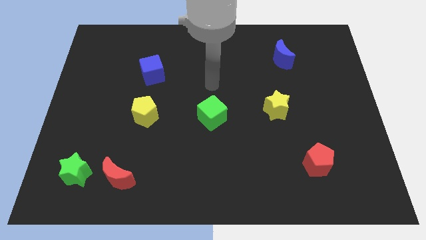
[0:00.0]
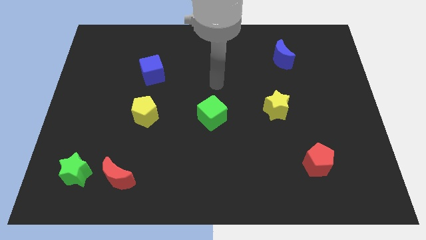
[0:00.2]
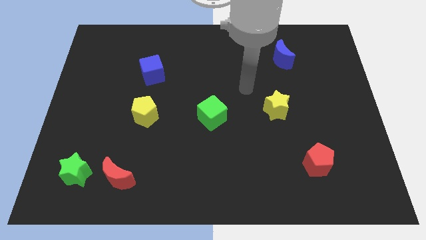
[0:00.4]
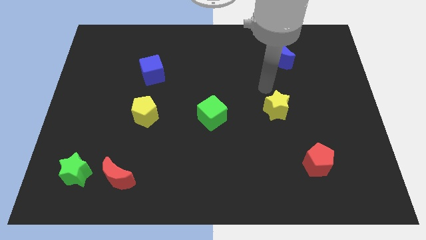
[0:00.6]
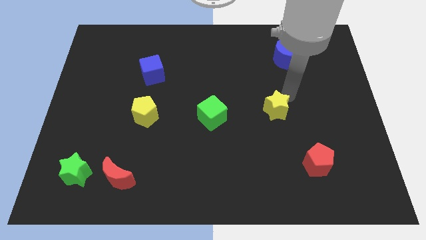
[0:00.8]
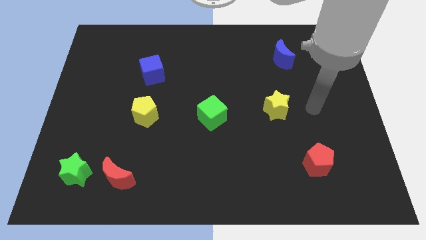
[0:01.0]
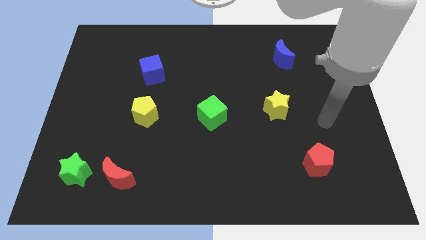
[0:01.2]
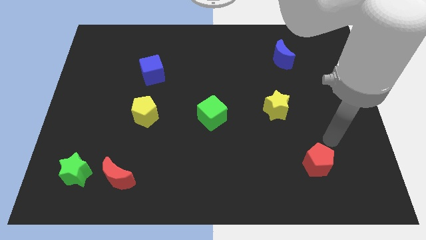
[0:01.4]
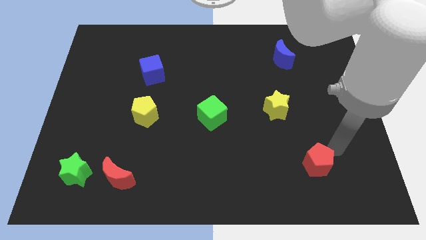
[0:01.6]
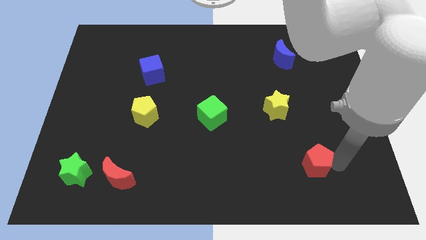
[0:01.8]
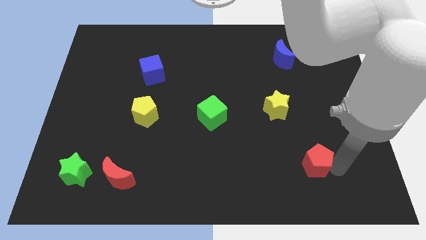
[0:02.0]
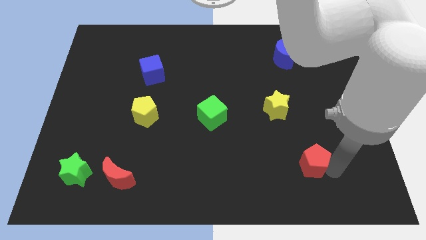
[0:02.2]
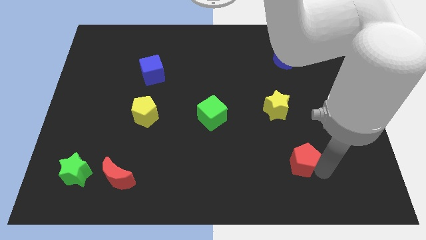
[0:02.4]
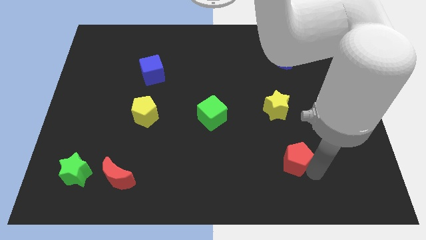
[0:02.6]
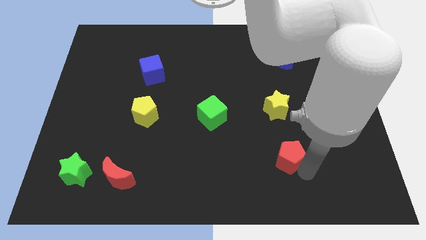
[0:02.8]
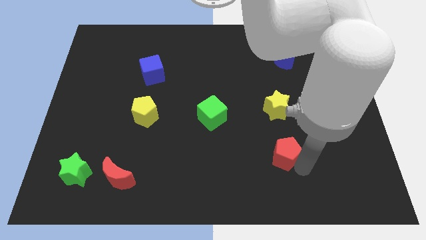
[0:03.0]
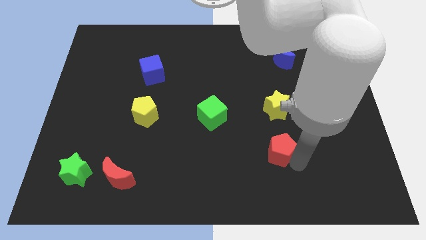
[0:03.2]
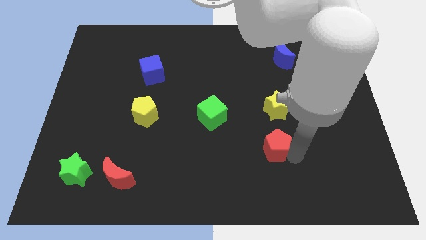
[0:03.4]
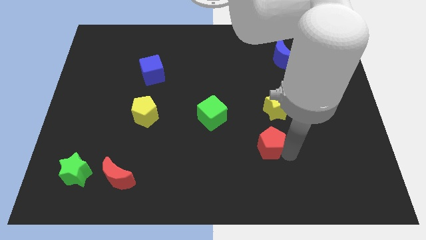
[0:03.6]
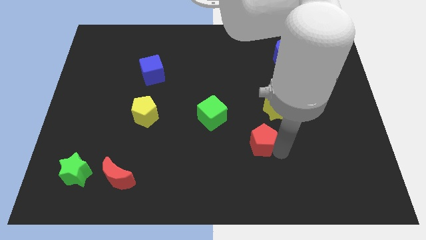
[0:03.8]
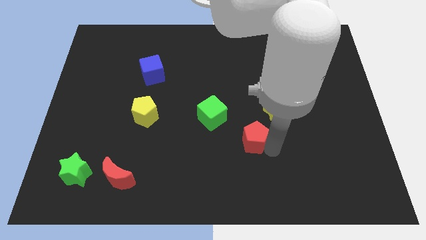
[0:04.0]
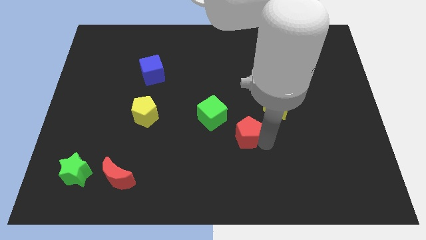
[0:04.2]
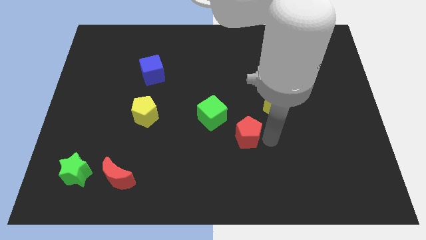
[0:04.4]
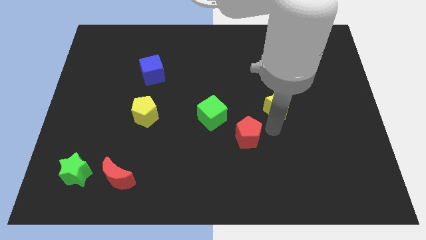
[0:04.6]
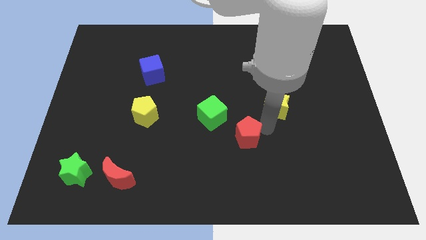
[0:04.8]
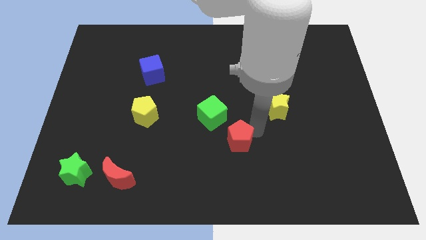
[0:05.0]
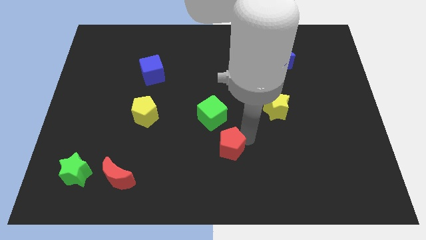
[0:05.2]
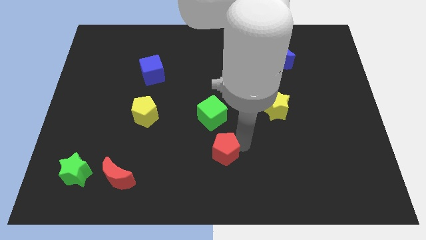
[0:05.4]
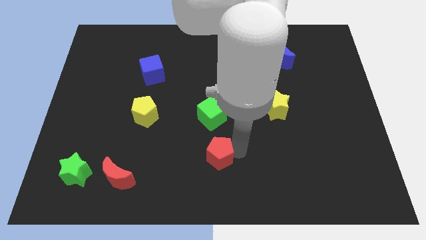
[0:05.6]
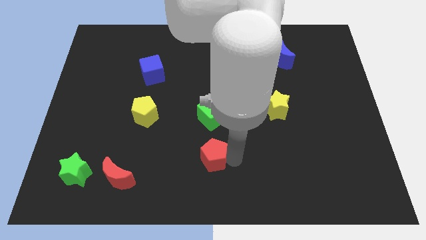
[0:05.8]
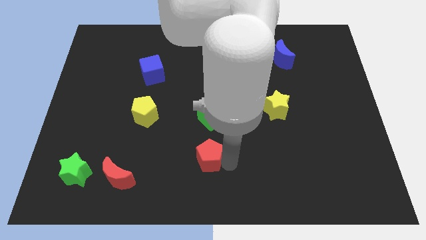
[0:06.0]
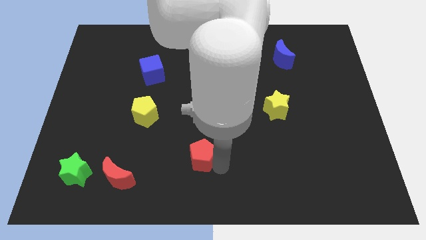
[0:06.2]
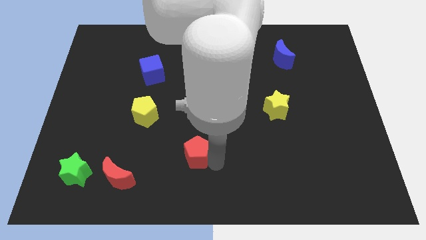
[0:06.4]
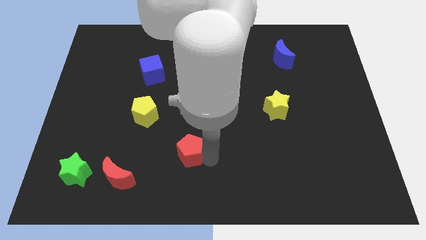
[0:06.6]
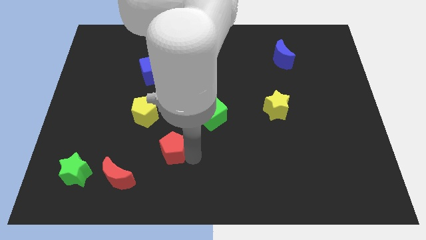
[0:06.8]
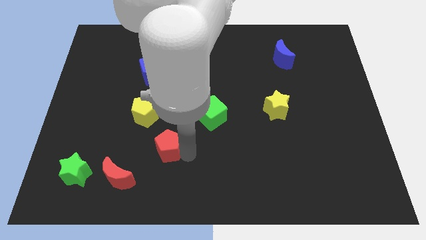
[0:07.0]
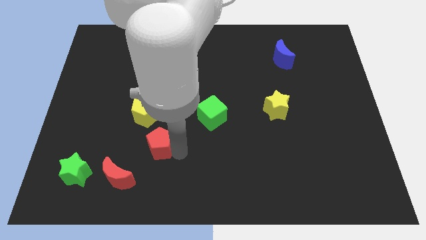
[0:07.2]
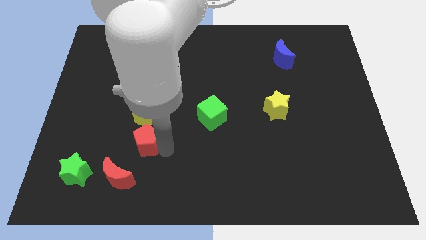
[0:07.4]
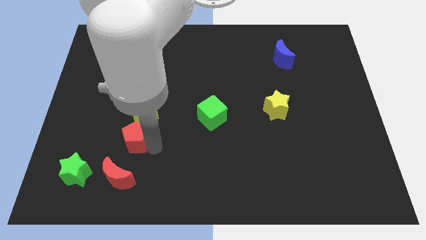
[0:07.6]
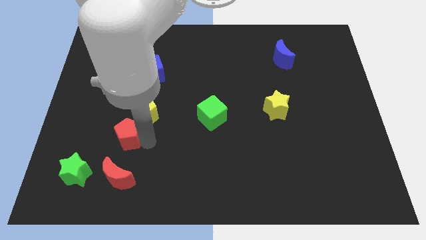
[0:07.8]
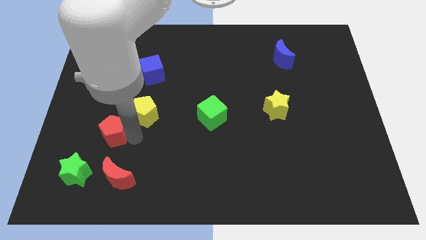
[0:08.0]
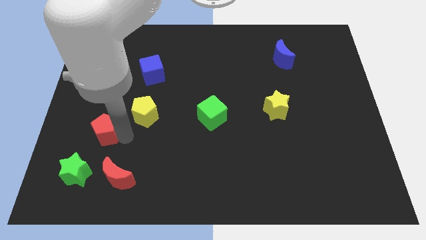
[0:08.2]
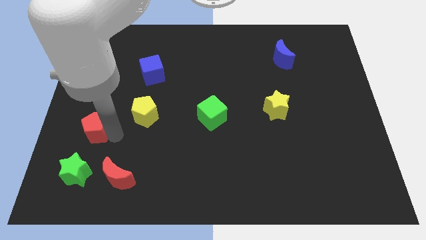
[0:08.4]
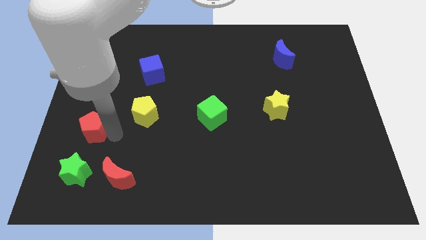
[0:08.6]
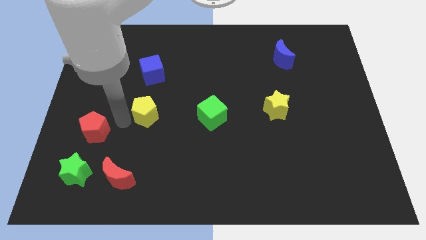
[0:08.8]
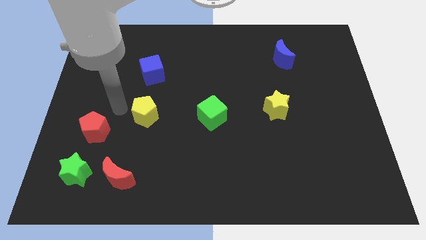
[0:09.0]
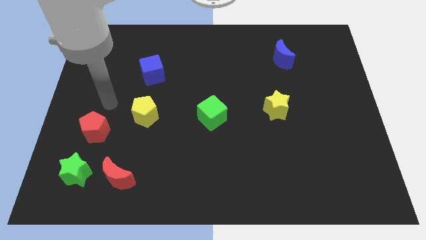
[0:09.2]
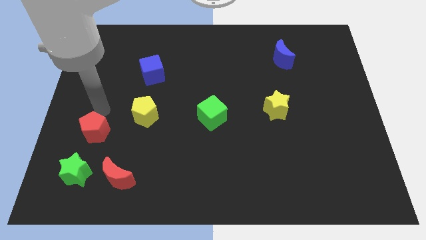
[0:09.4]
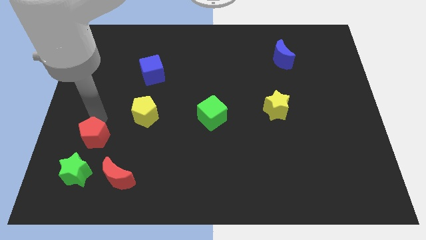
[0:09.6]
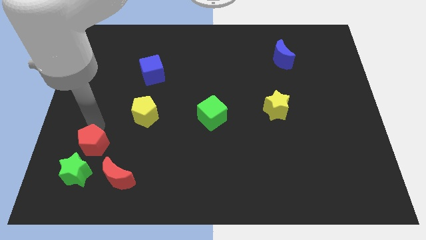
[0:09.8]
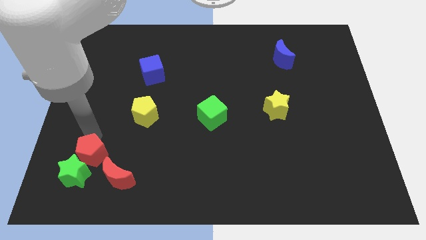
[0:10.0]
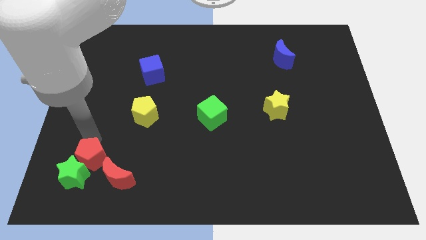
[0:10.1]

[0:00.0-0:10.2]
move the red pentagon close to the green star

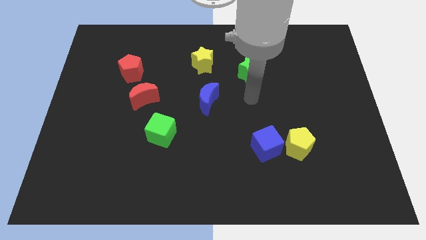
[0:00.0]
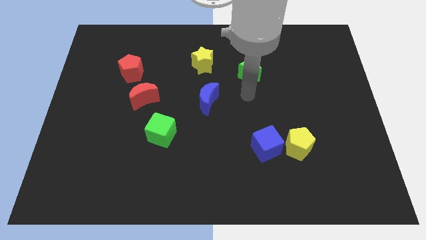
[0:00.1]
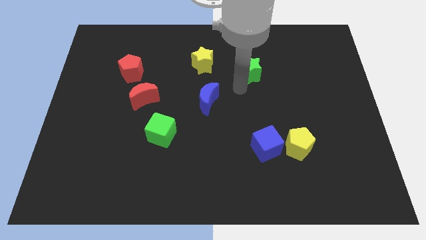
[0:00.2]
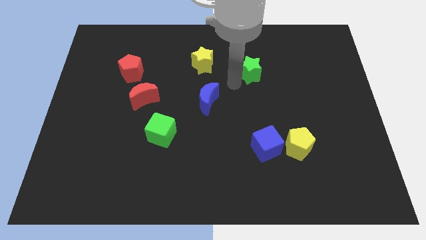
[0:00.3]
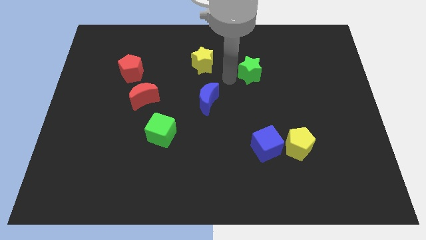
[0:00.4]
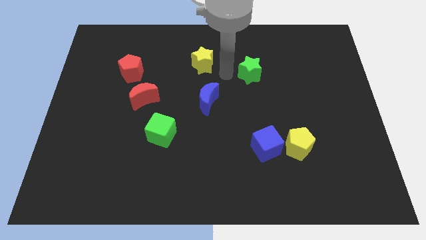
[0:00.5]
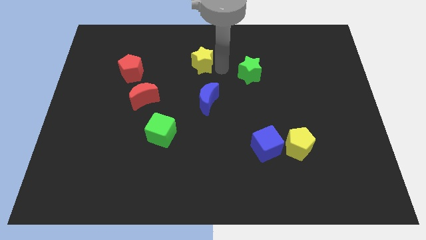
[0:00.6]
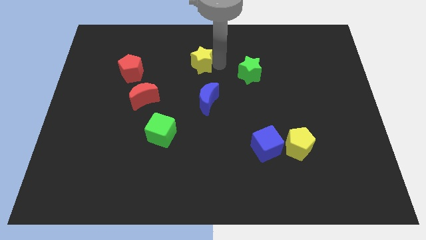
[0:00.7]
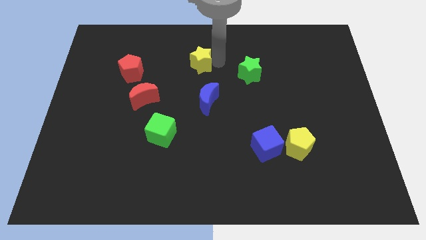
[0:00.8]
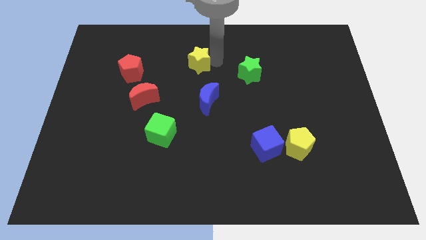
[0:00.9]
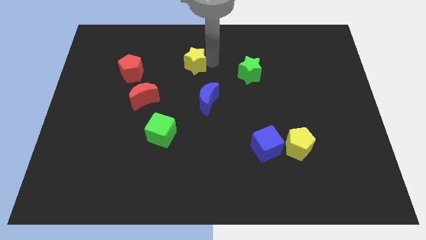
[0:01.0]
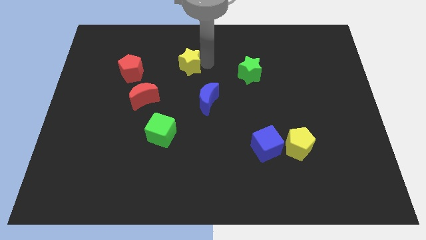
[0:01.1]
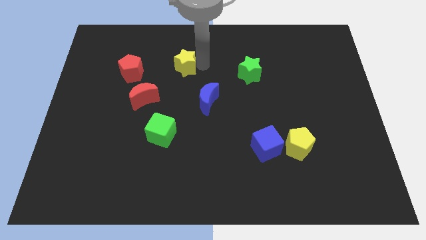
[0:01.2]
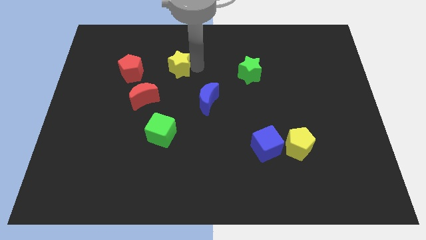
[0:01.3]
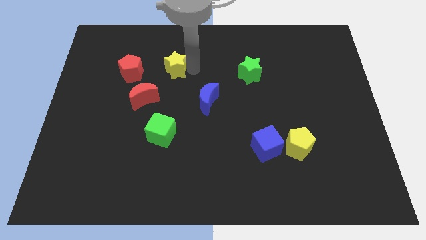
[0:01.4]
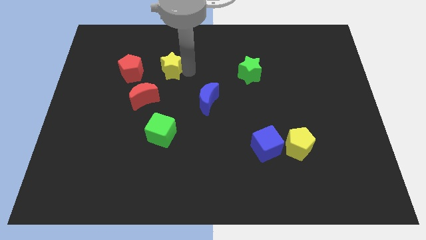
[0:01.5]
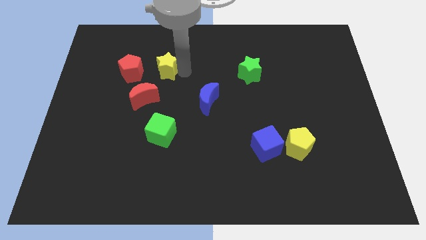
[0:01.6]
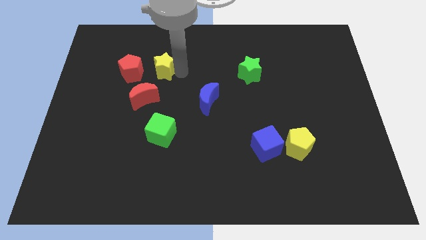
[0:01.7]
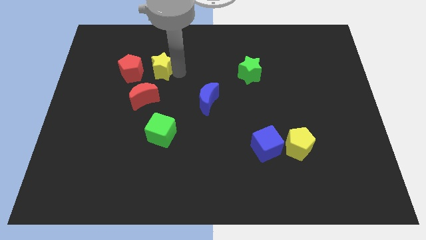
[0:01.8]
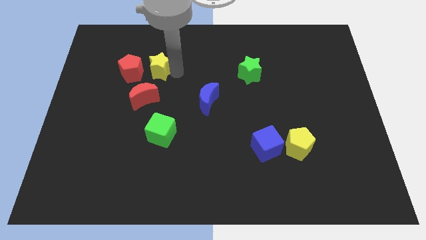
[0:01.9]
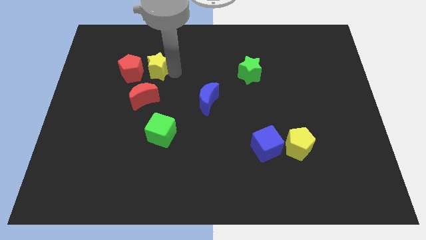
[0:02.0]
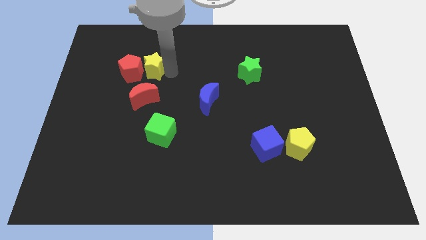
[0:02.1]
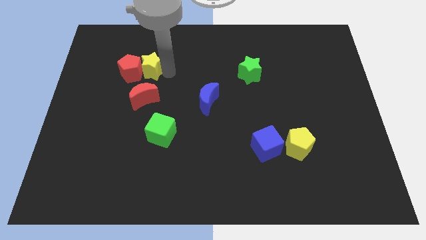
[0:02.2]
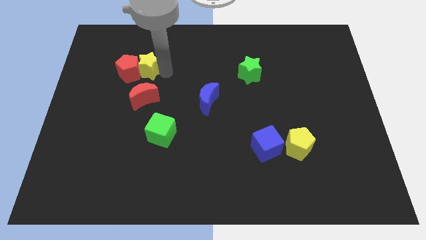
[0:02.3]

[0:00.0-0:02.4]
slide the yellow star close to the red pentagon

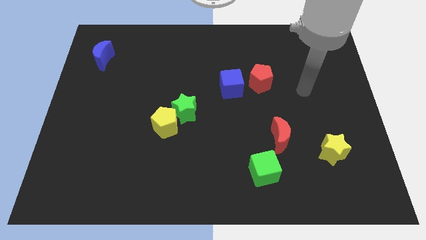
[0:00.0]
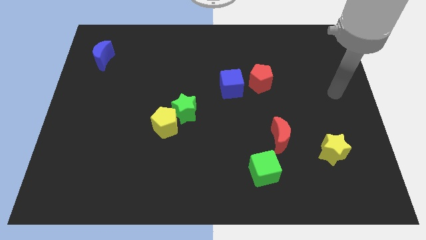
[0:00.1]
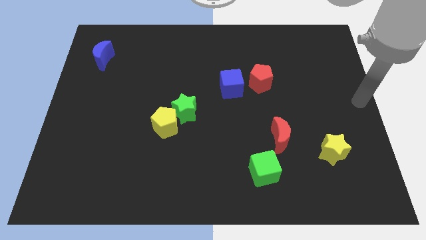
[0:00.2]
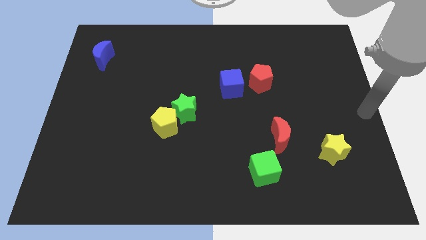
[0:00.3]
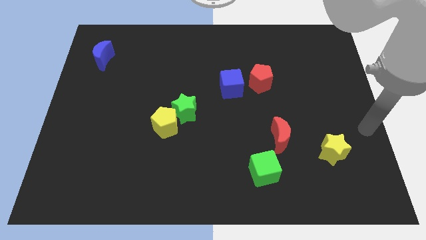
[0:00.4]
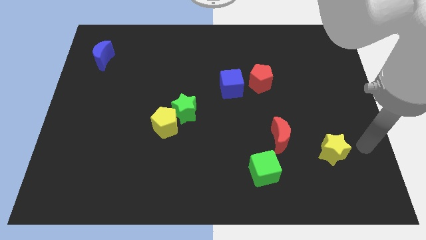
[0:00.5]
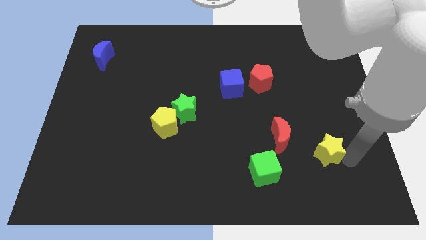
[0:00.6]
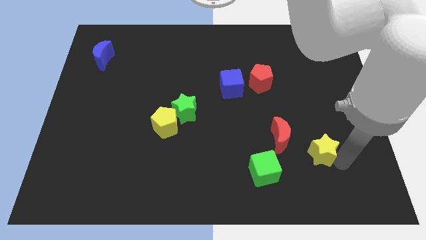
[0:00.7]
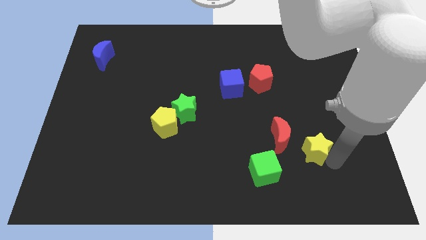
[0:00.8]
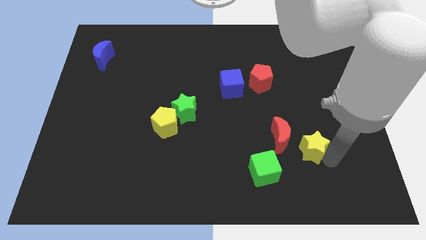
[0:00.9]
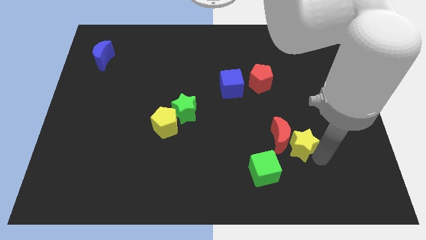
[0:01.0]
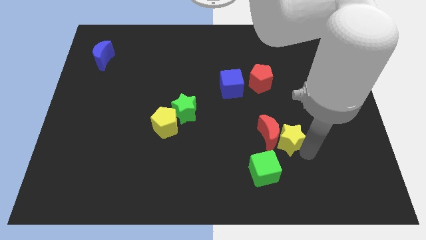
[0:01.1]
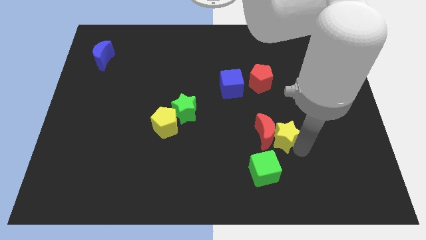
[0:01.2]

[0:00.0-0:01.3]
put the yellow star towards the red moon
